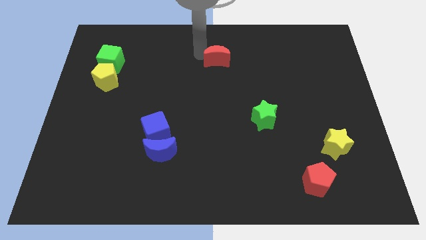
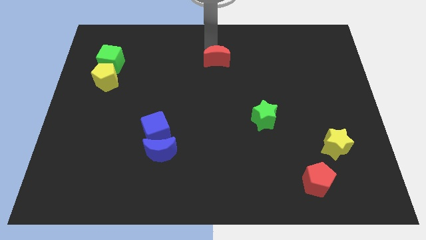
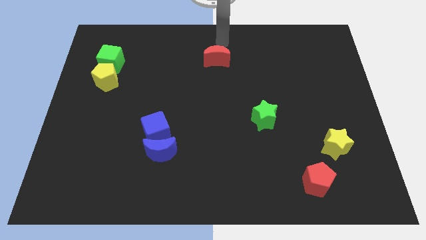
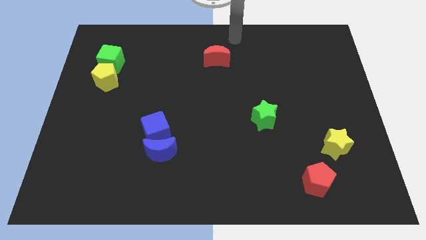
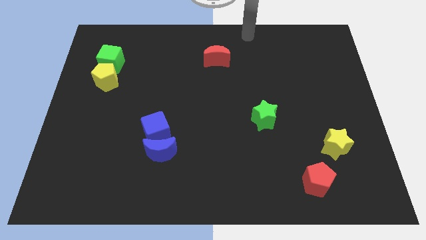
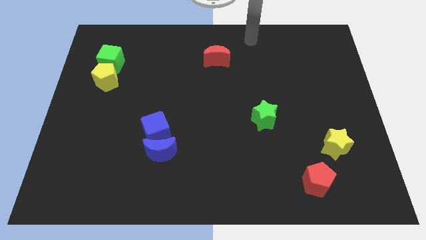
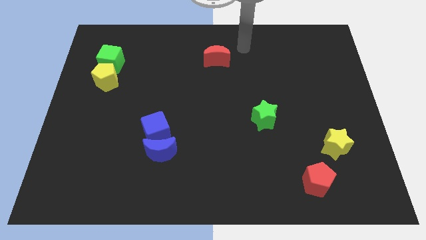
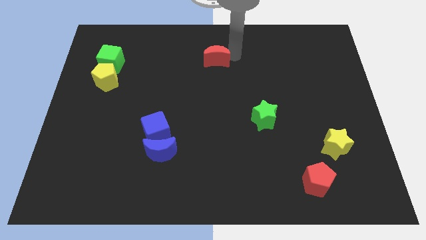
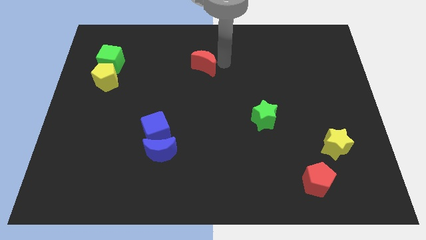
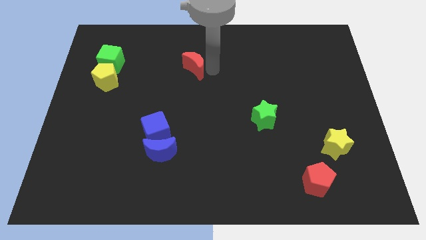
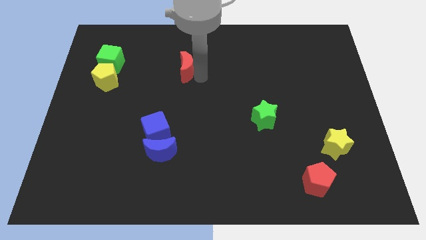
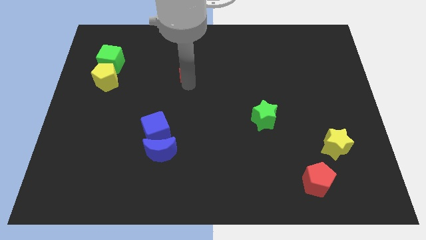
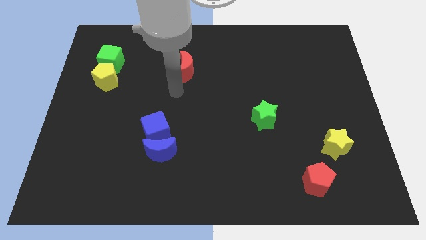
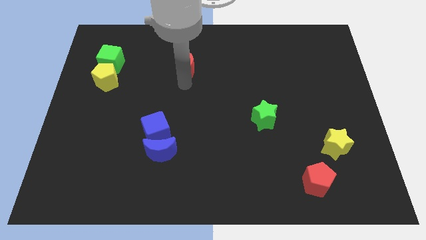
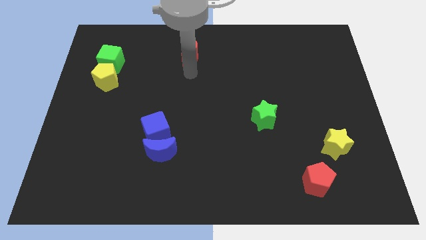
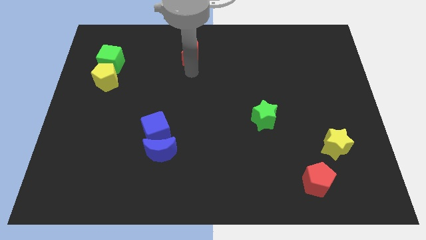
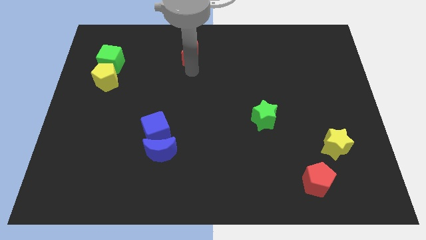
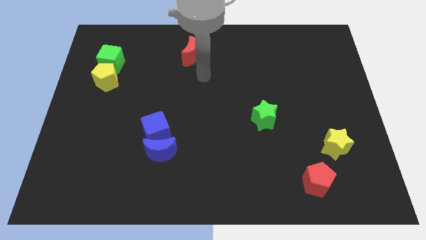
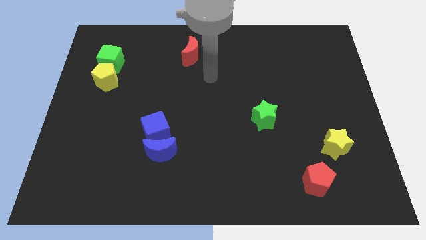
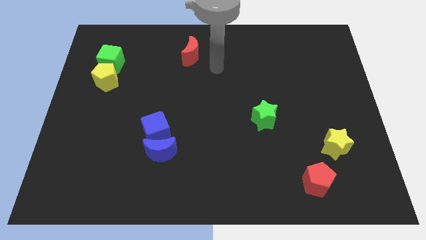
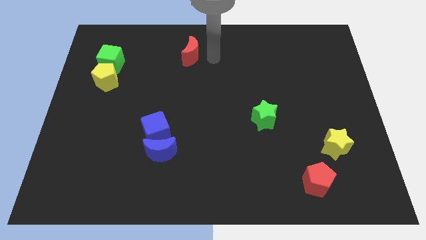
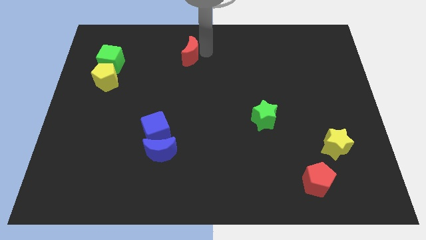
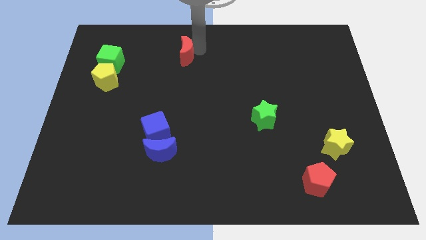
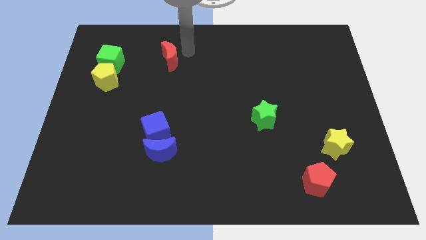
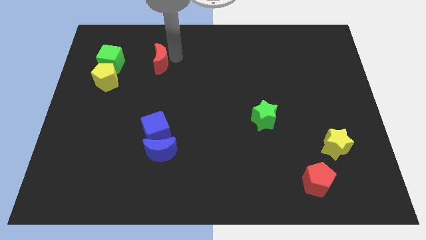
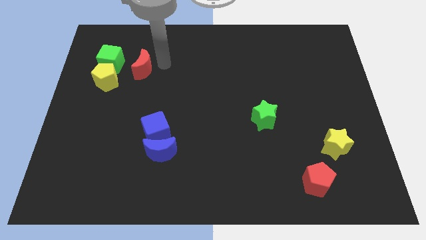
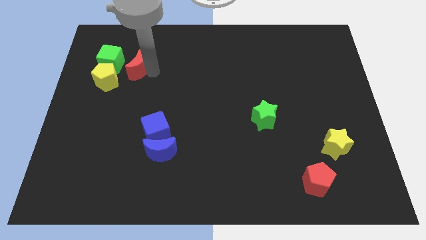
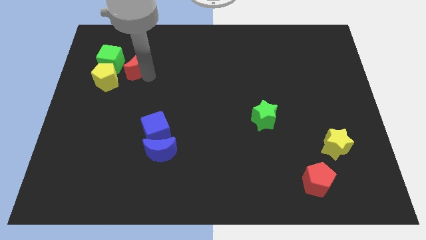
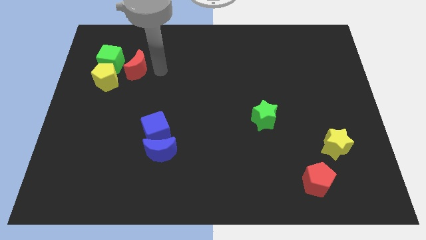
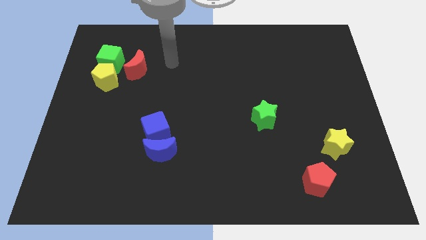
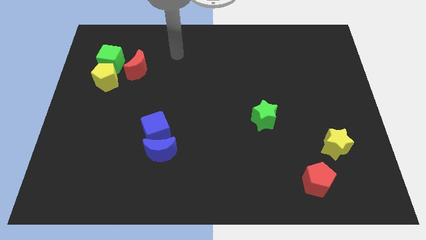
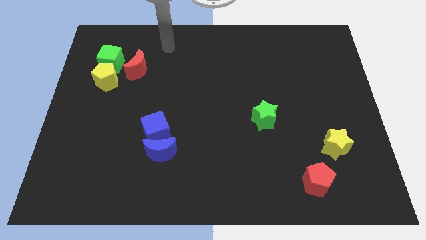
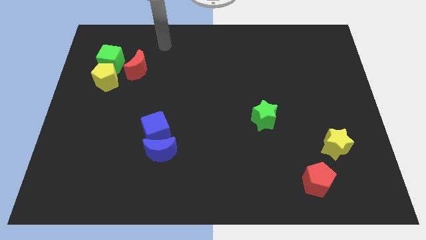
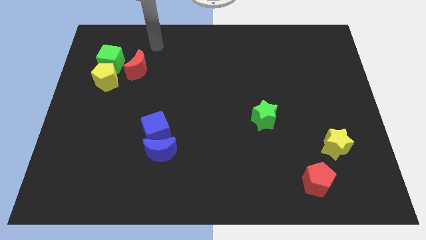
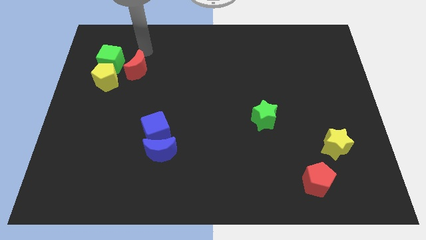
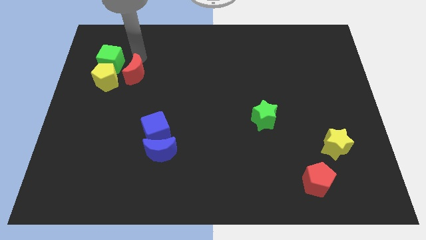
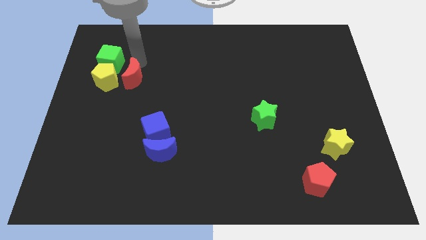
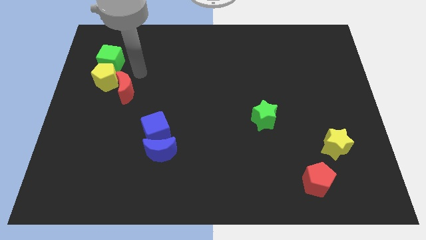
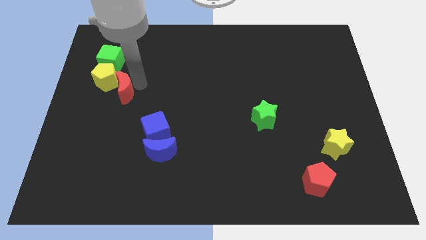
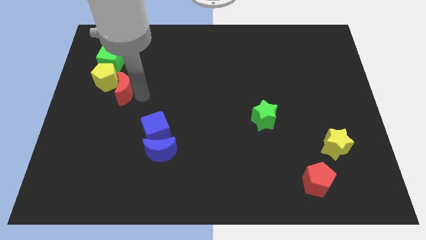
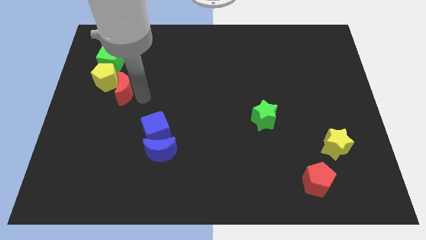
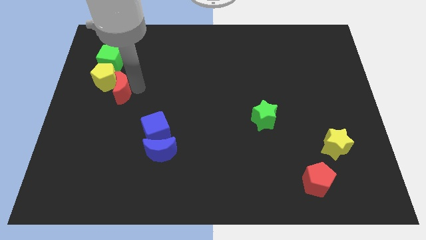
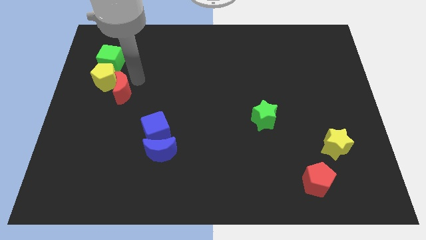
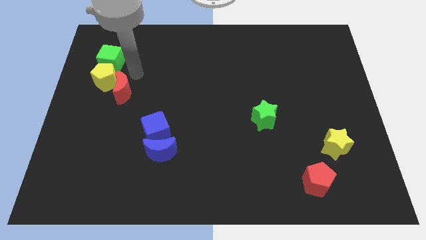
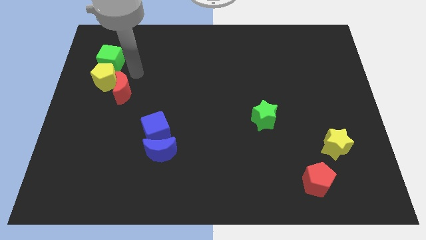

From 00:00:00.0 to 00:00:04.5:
move the red crescent into the yellow pentagon

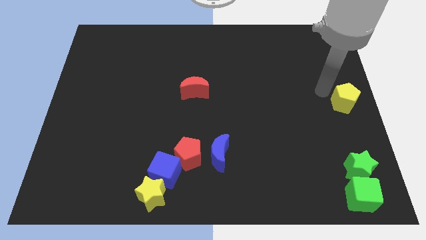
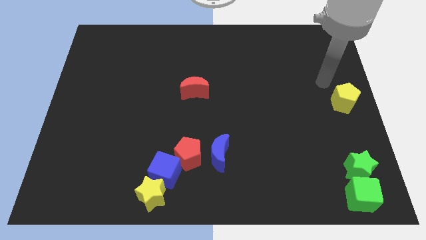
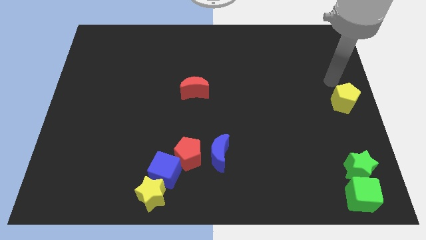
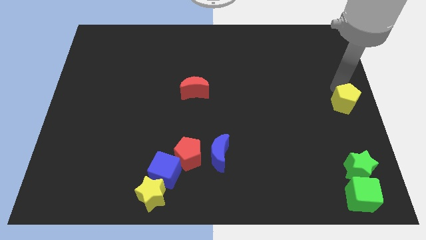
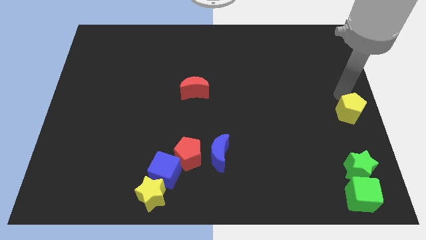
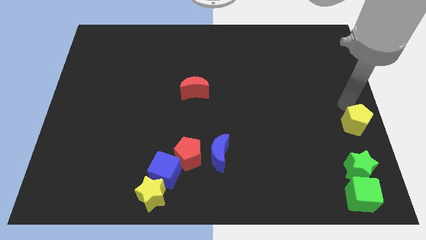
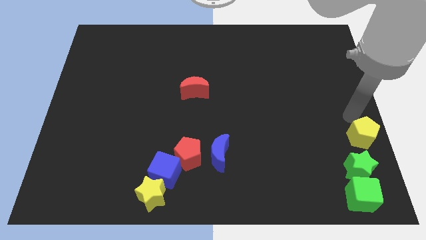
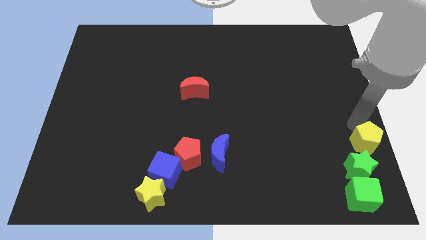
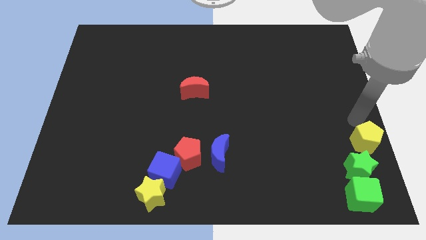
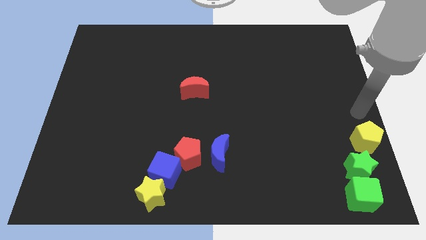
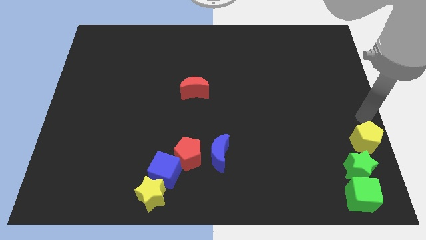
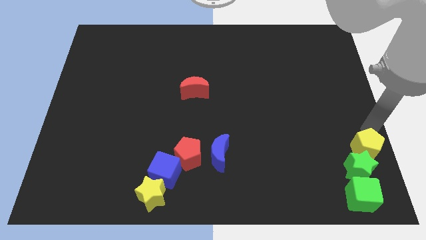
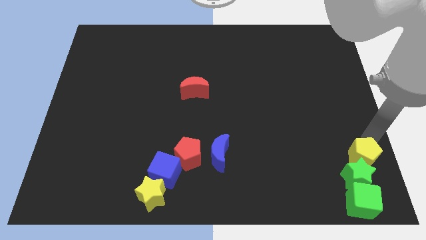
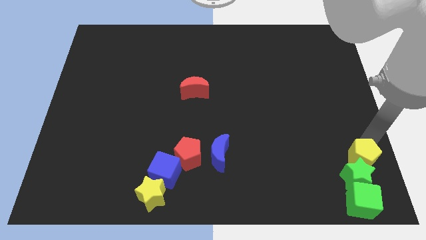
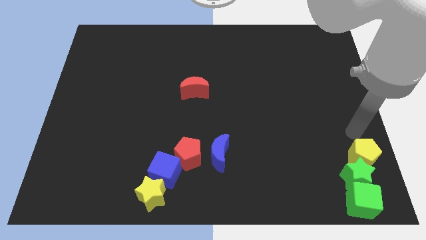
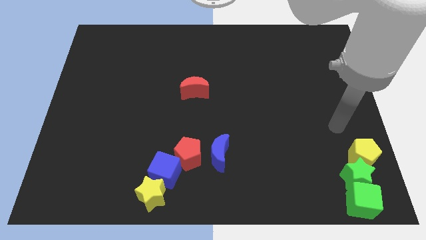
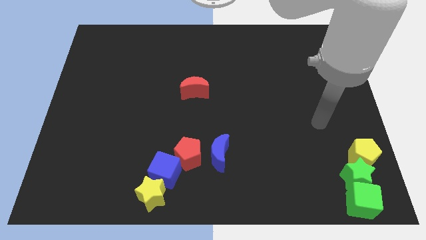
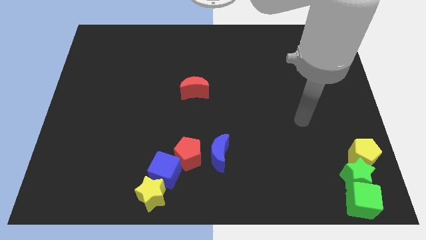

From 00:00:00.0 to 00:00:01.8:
place yellow pentagon on top of green star

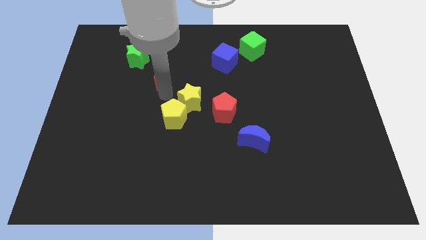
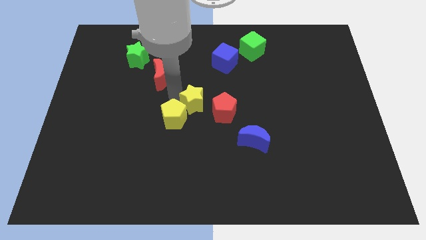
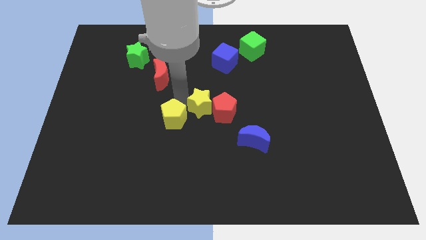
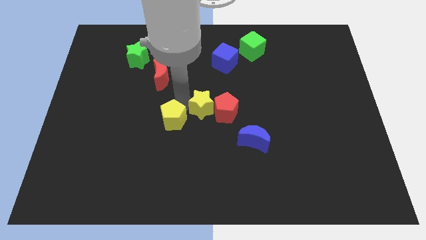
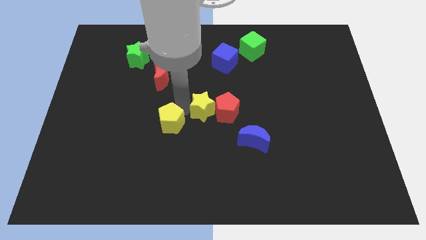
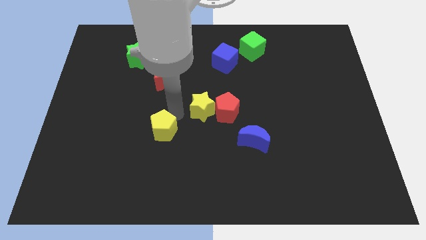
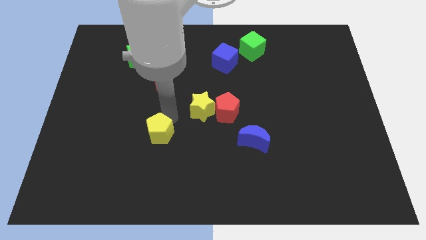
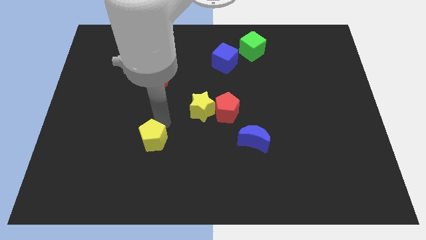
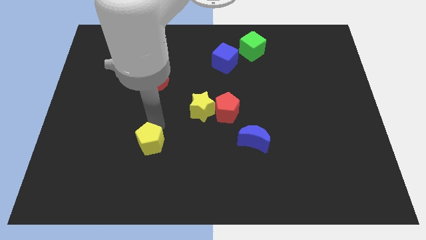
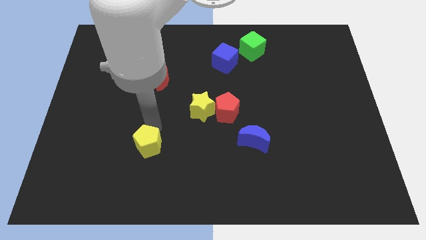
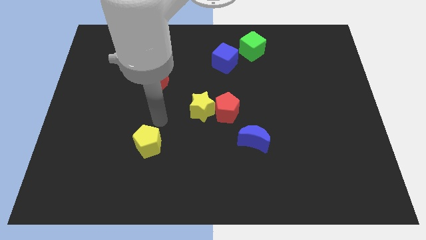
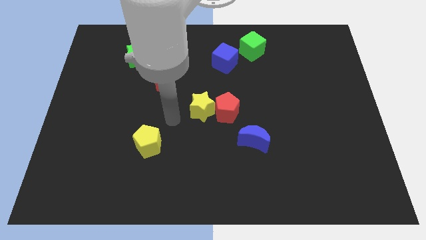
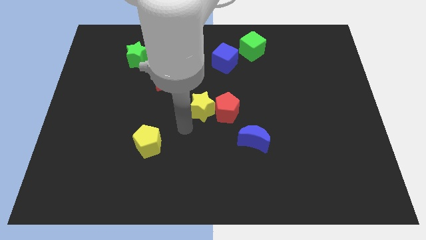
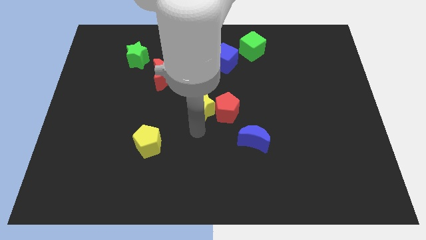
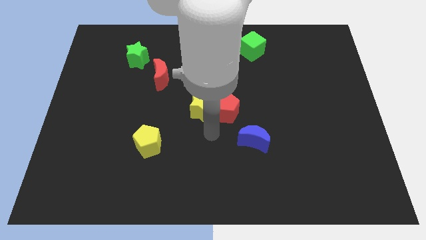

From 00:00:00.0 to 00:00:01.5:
separate yellow blocks

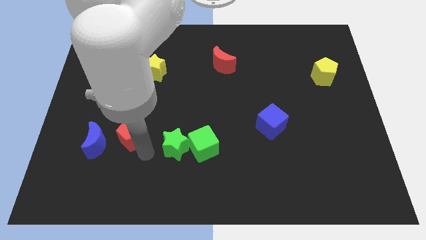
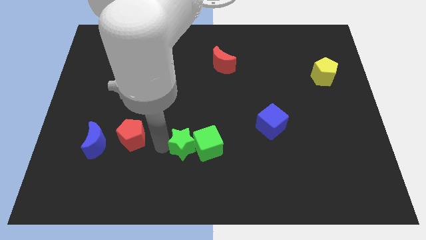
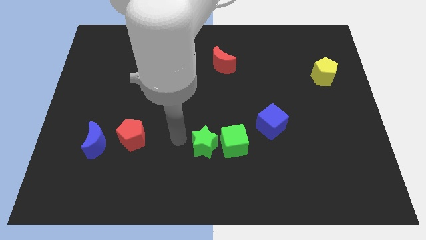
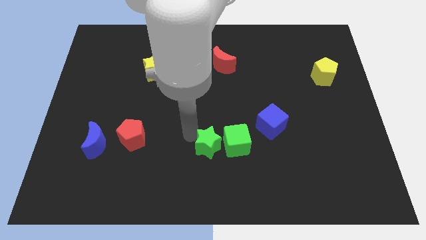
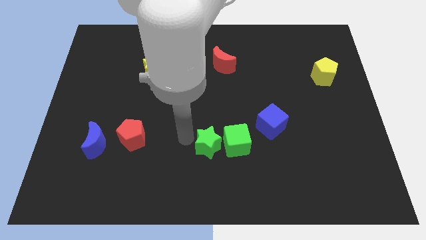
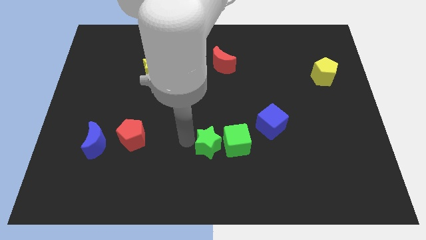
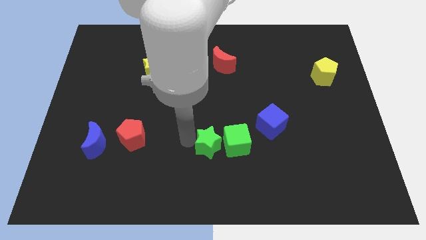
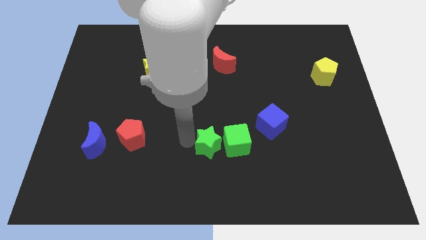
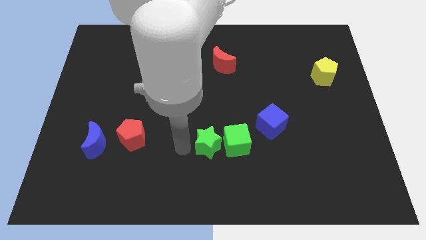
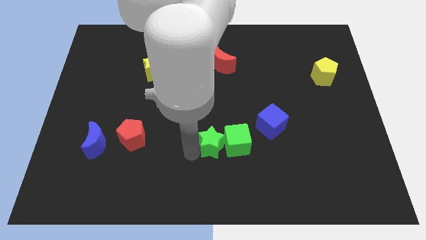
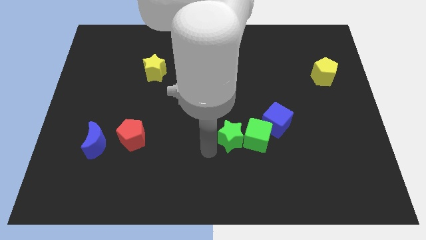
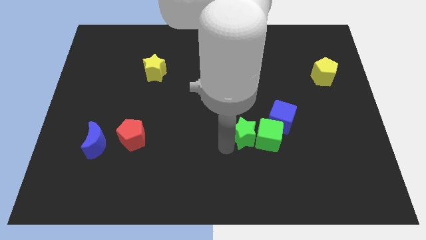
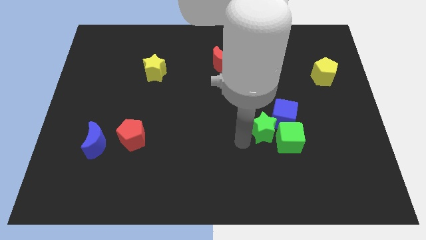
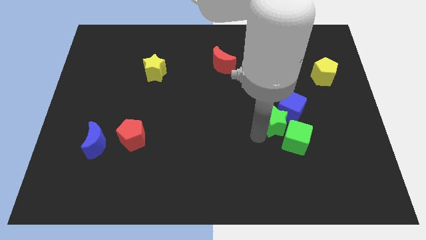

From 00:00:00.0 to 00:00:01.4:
push the green star into the blue cube
